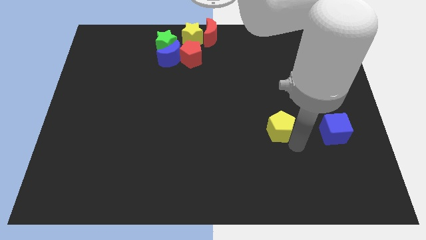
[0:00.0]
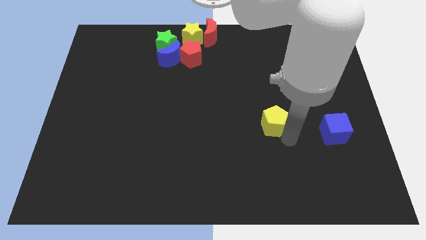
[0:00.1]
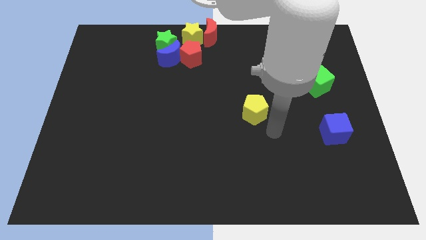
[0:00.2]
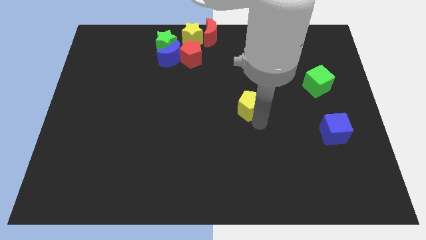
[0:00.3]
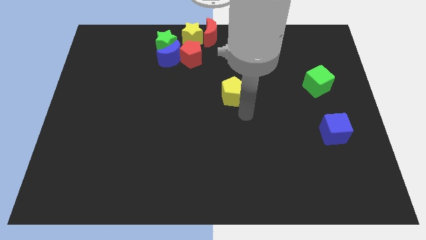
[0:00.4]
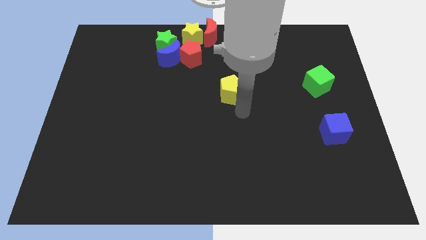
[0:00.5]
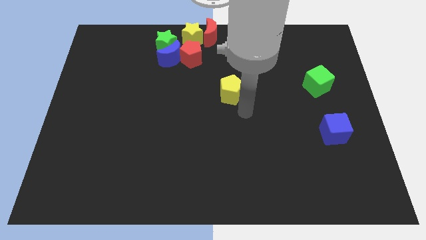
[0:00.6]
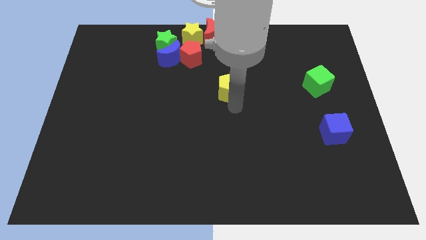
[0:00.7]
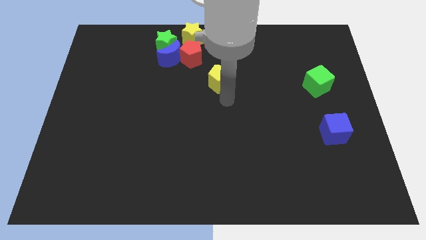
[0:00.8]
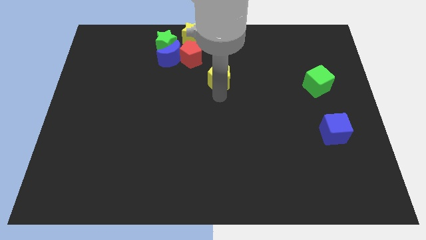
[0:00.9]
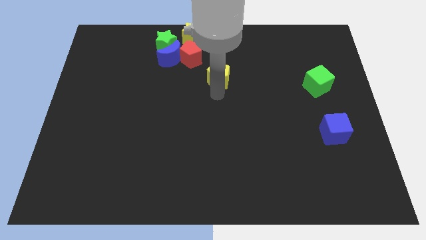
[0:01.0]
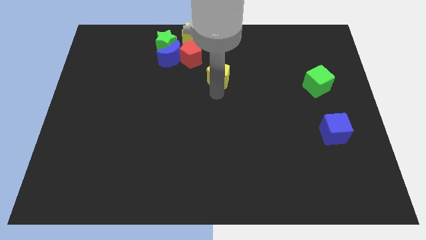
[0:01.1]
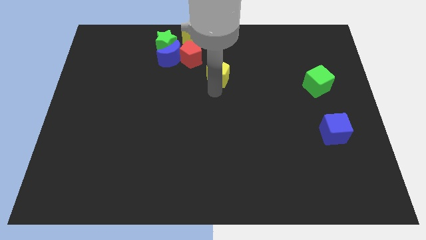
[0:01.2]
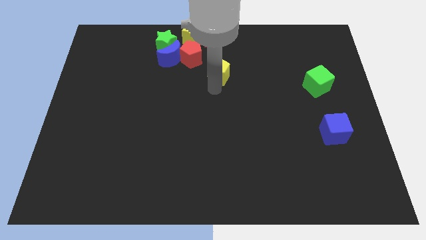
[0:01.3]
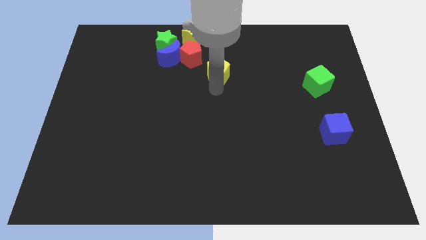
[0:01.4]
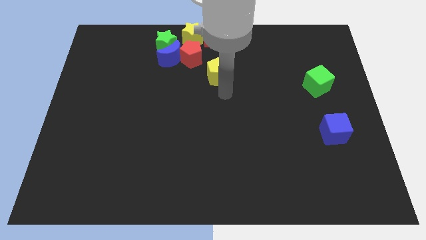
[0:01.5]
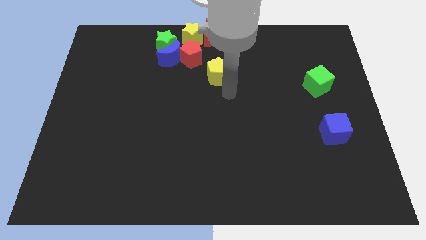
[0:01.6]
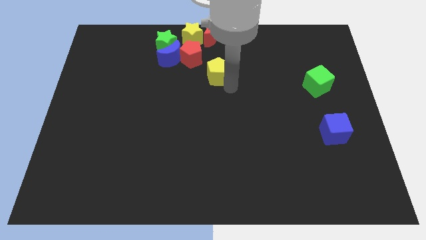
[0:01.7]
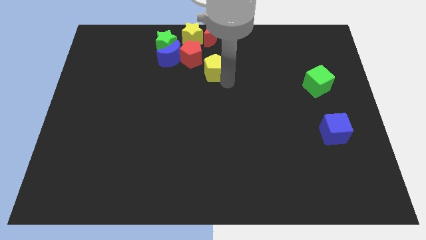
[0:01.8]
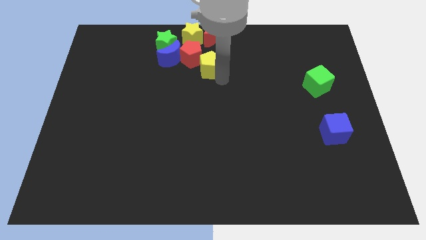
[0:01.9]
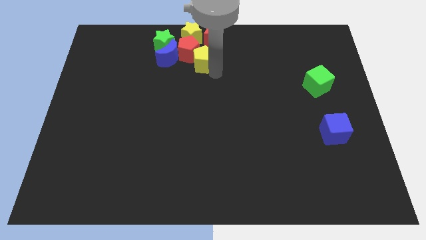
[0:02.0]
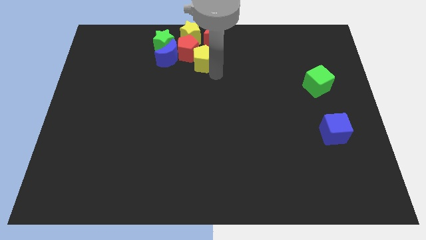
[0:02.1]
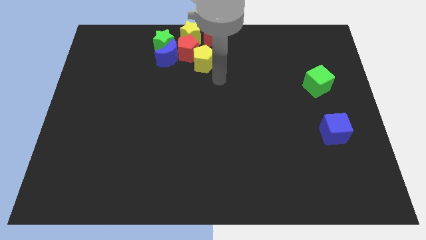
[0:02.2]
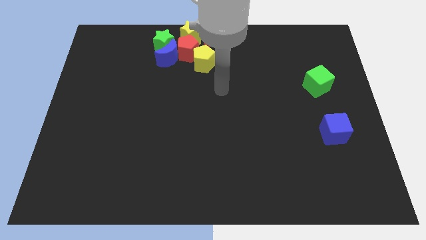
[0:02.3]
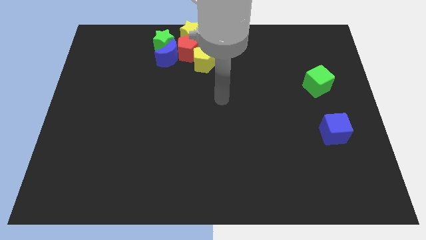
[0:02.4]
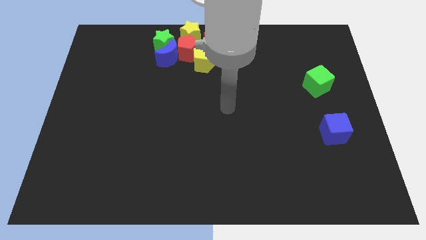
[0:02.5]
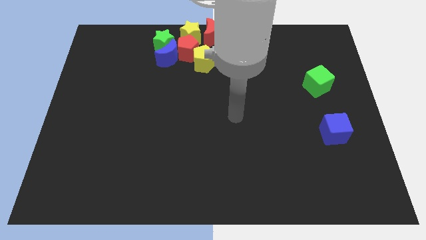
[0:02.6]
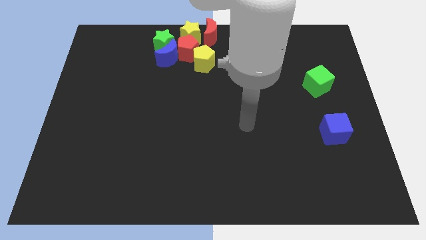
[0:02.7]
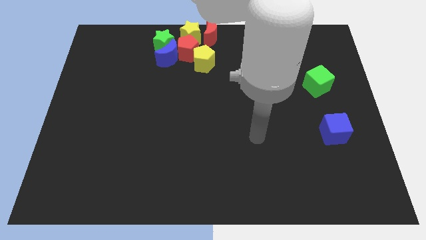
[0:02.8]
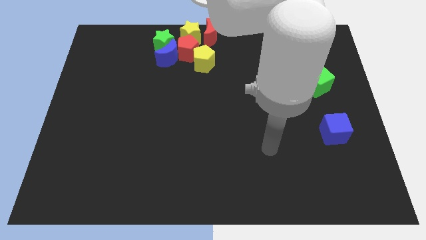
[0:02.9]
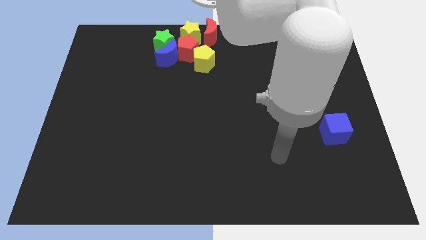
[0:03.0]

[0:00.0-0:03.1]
push the yellow pentagon into the red pentagon

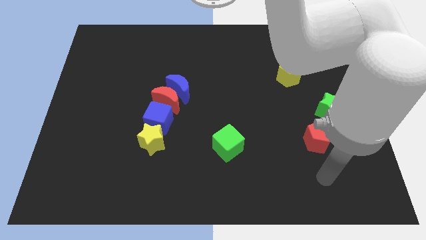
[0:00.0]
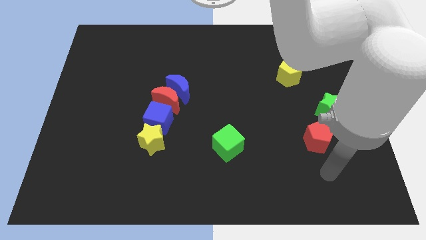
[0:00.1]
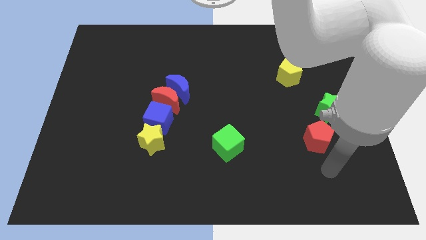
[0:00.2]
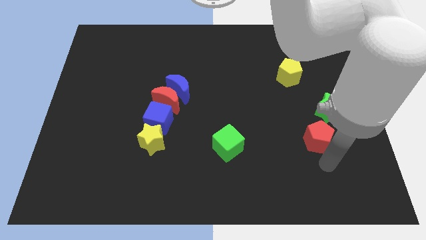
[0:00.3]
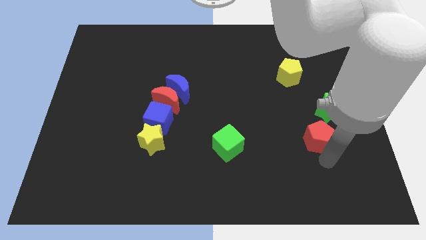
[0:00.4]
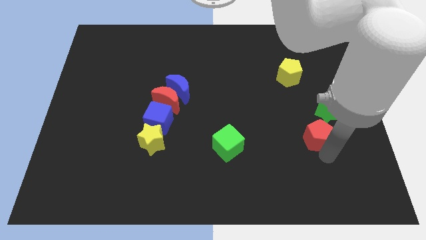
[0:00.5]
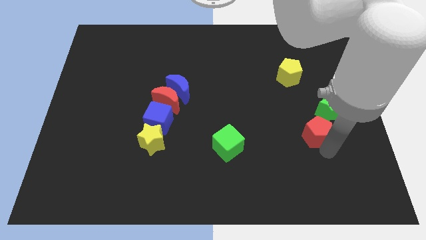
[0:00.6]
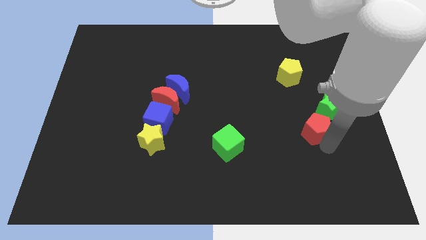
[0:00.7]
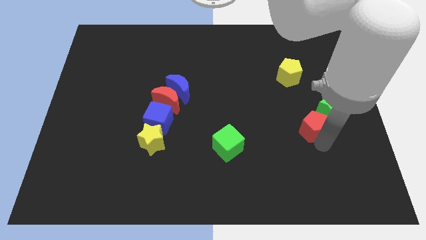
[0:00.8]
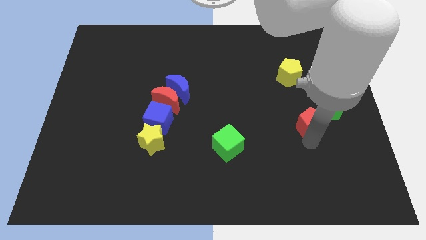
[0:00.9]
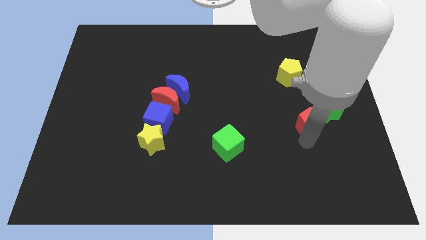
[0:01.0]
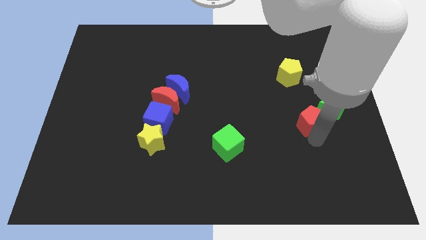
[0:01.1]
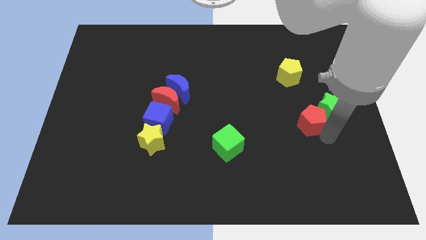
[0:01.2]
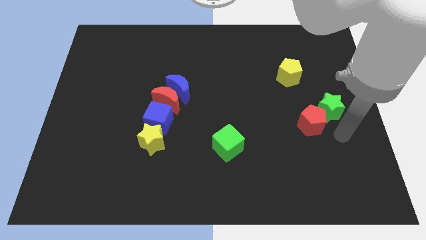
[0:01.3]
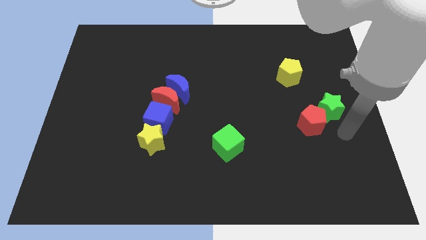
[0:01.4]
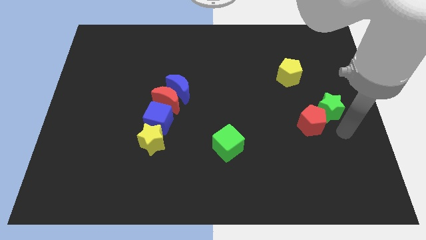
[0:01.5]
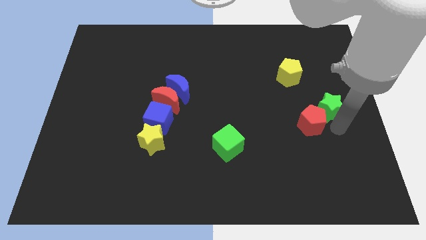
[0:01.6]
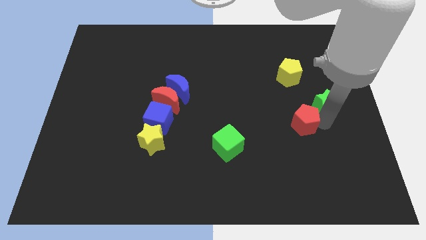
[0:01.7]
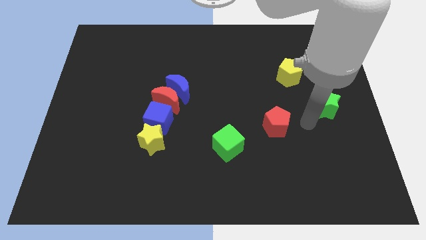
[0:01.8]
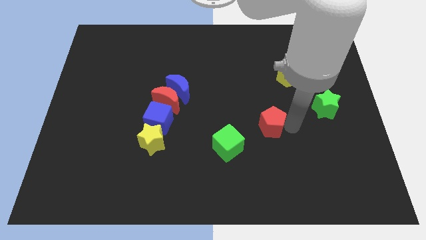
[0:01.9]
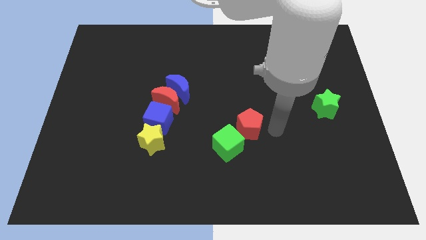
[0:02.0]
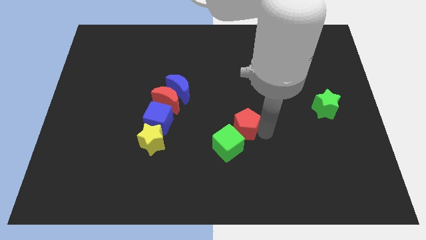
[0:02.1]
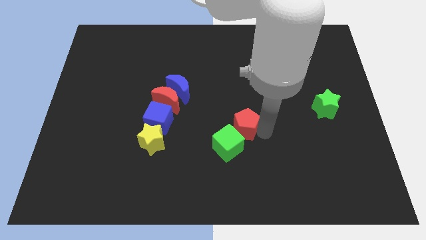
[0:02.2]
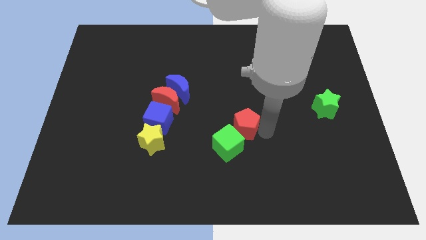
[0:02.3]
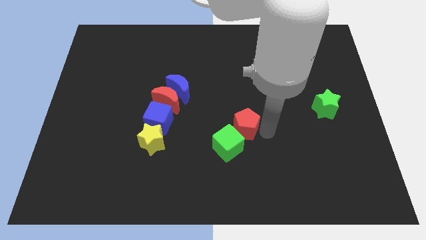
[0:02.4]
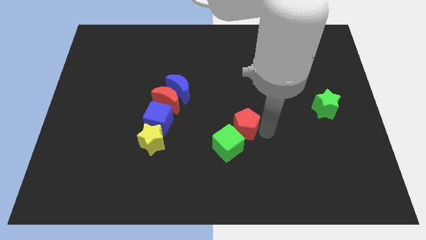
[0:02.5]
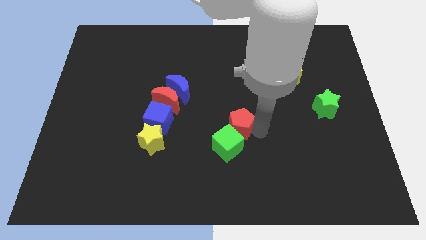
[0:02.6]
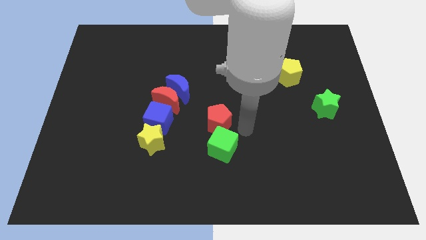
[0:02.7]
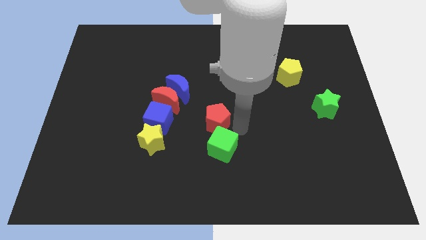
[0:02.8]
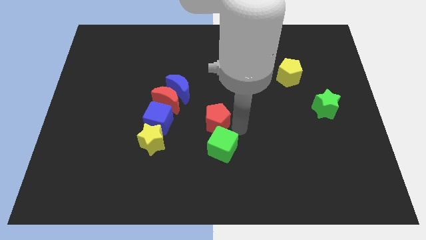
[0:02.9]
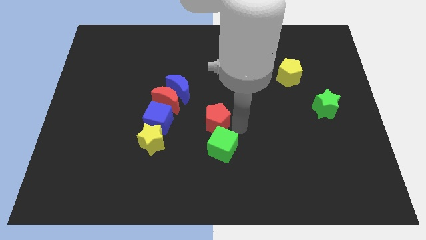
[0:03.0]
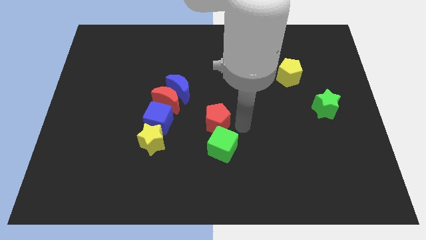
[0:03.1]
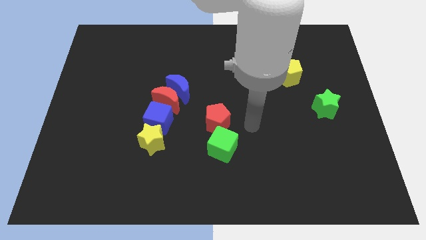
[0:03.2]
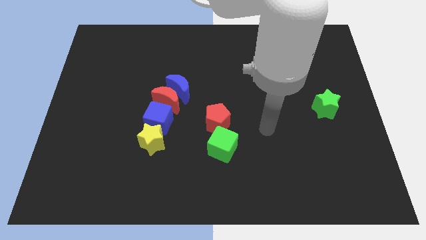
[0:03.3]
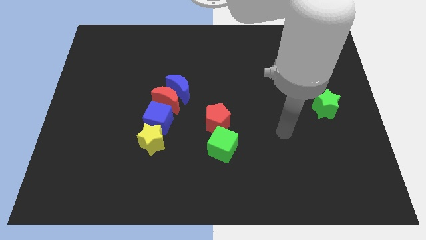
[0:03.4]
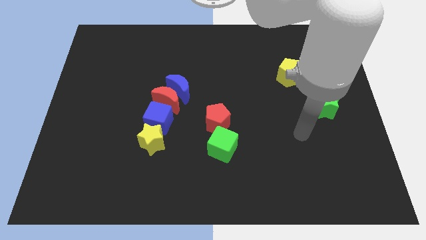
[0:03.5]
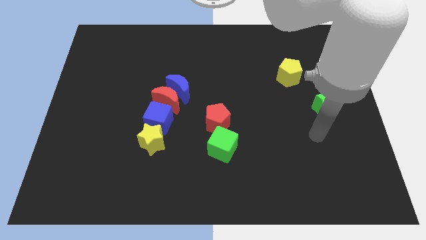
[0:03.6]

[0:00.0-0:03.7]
place the red pentagon on top of the green cube

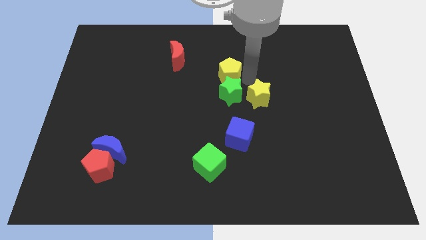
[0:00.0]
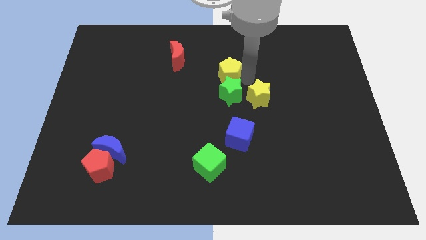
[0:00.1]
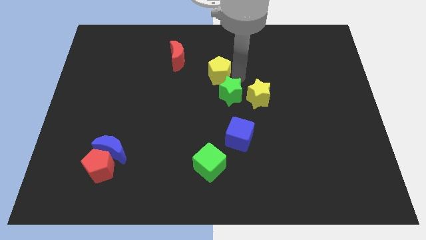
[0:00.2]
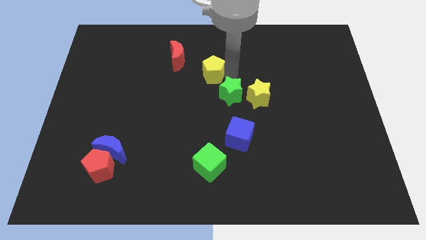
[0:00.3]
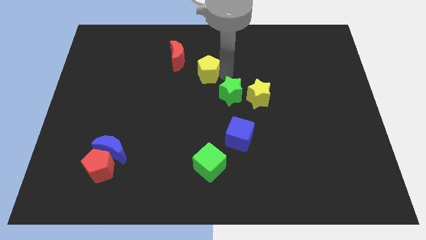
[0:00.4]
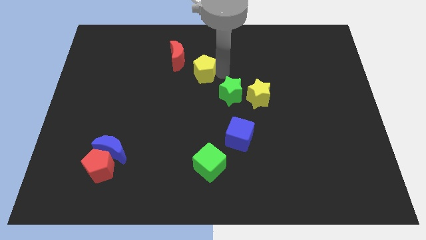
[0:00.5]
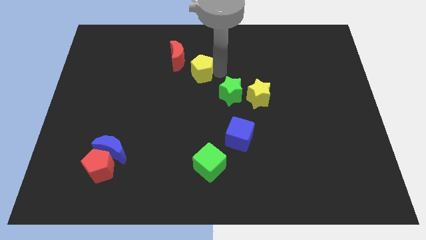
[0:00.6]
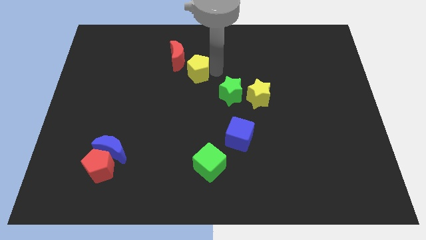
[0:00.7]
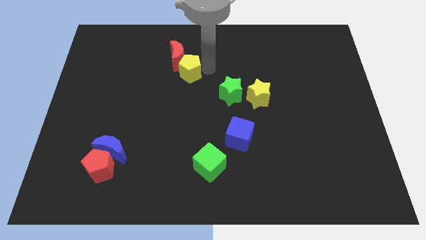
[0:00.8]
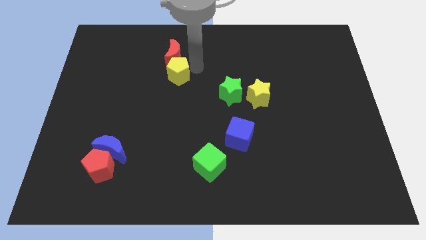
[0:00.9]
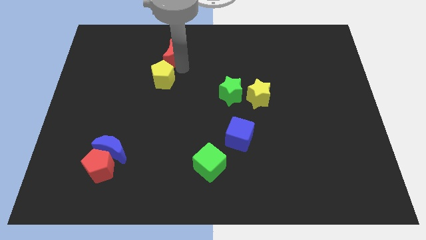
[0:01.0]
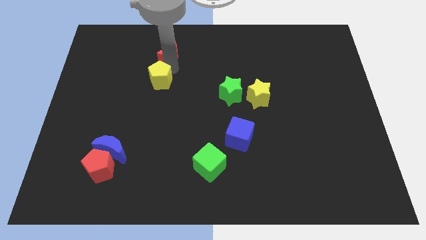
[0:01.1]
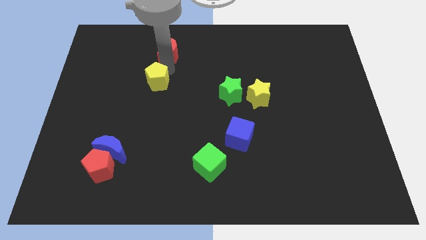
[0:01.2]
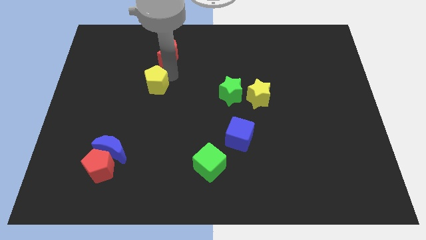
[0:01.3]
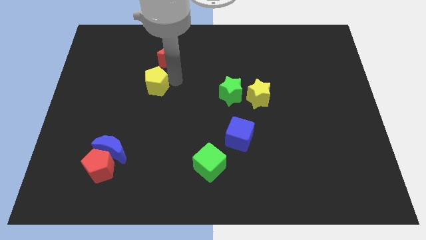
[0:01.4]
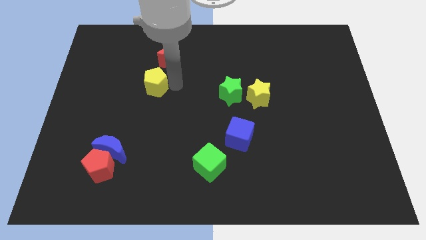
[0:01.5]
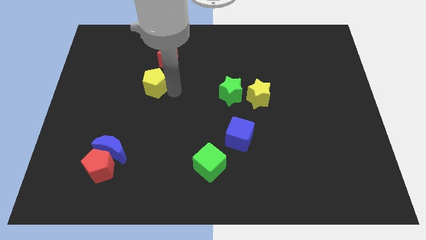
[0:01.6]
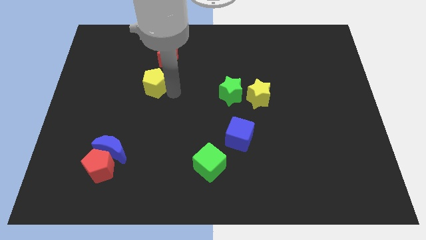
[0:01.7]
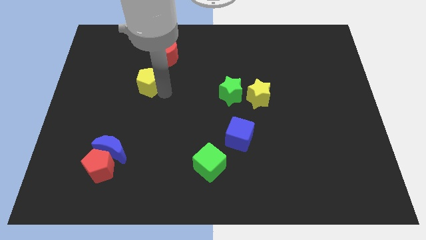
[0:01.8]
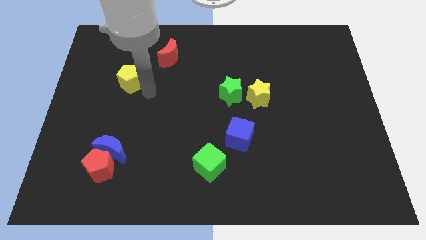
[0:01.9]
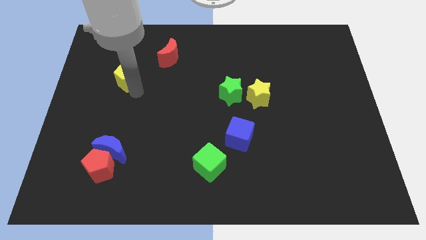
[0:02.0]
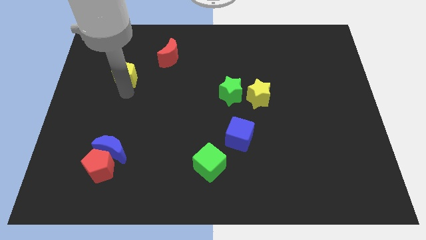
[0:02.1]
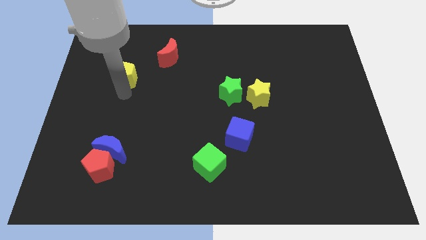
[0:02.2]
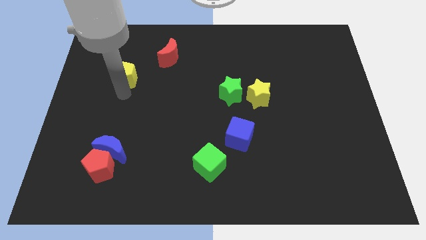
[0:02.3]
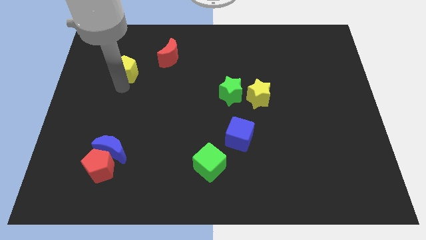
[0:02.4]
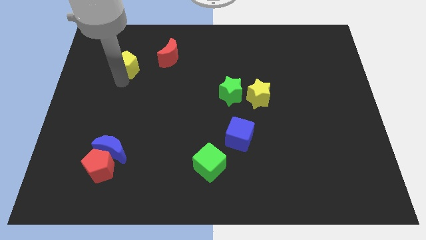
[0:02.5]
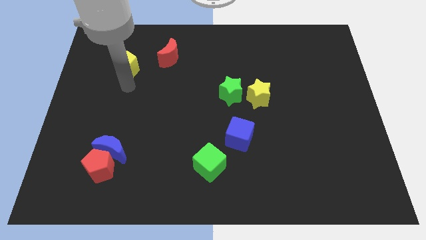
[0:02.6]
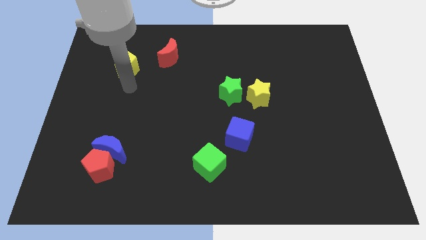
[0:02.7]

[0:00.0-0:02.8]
place yellow pentagon to the bottom left of red moon
